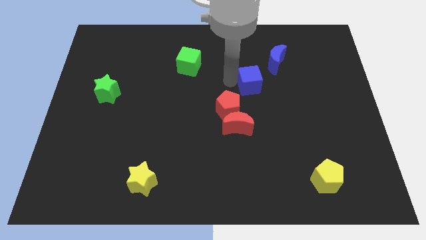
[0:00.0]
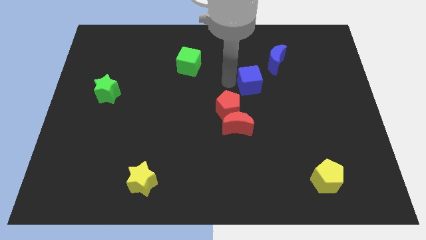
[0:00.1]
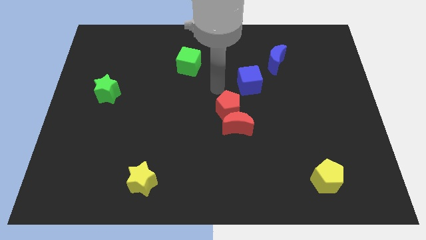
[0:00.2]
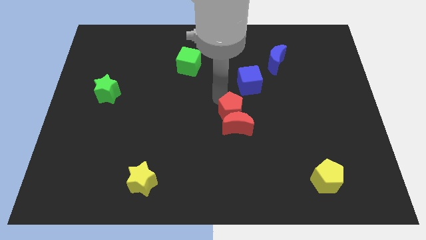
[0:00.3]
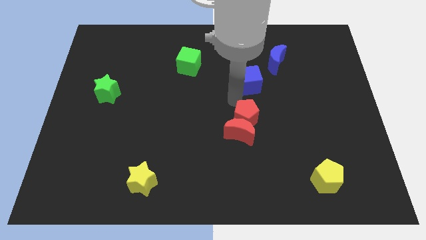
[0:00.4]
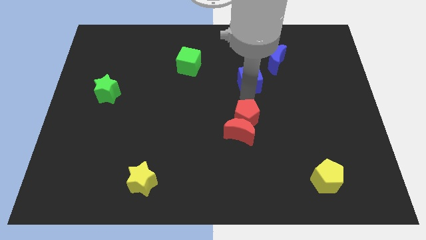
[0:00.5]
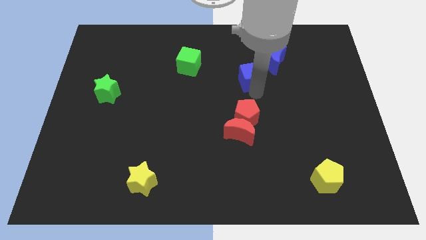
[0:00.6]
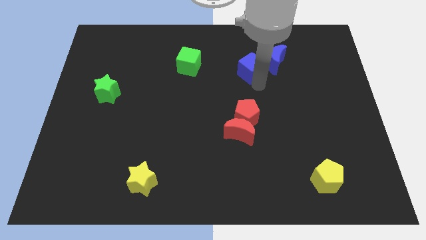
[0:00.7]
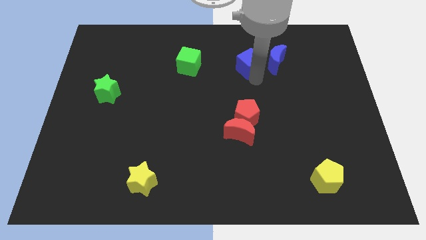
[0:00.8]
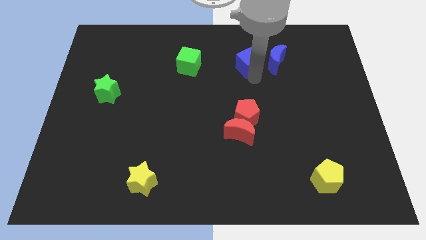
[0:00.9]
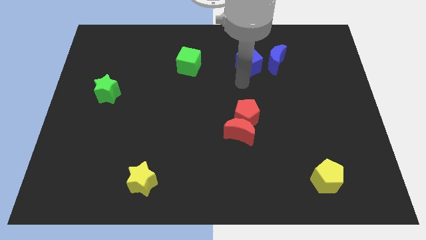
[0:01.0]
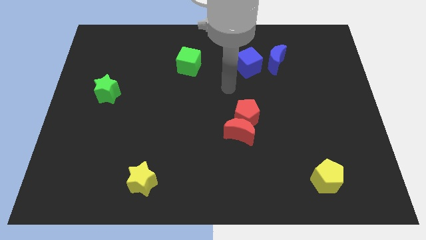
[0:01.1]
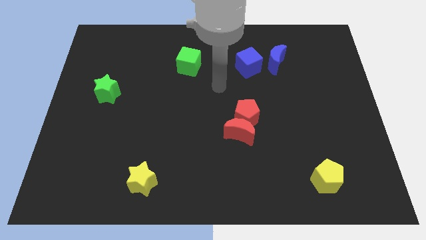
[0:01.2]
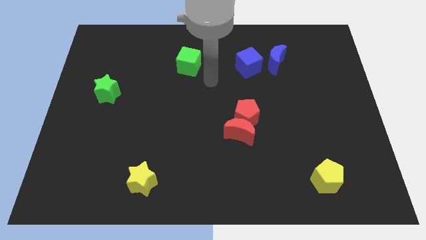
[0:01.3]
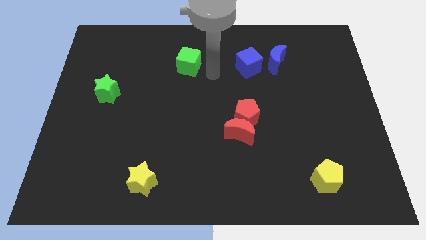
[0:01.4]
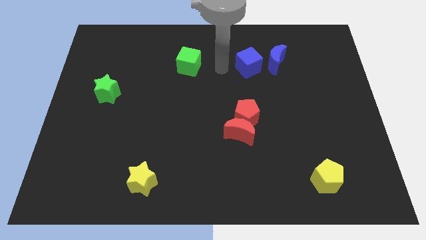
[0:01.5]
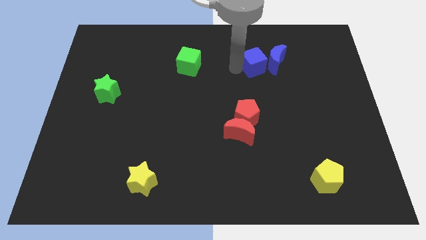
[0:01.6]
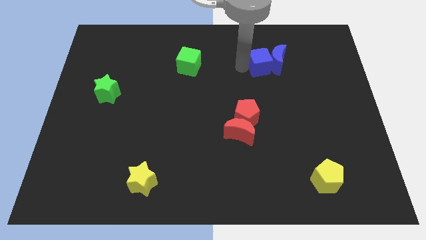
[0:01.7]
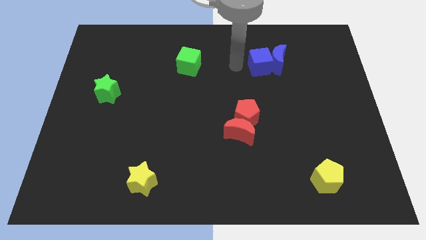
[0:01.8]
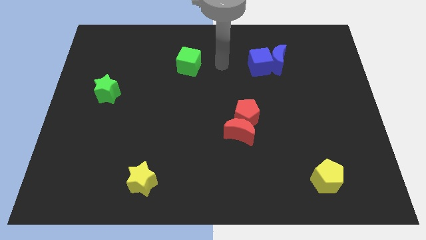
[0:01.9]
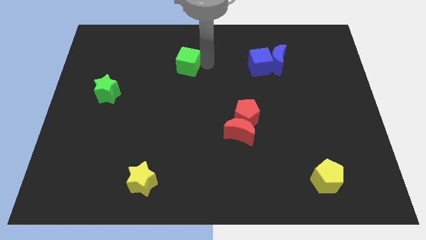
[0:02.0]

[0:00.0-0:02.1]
separate the blue blocks from the red blocks

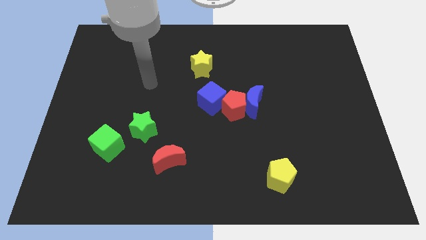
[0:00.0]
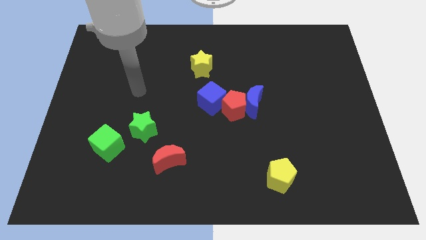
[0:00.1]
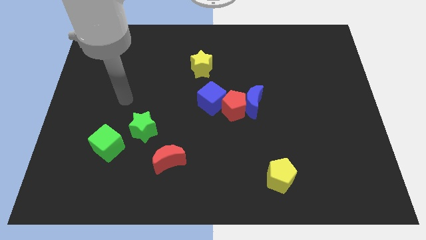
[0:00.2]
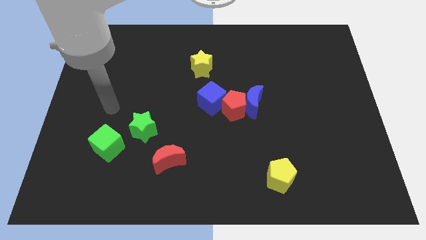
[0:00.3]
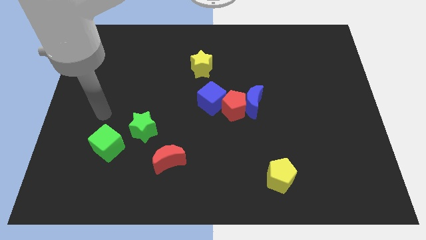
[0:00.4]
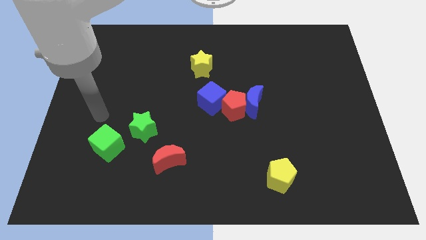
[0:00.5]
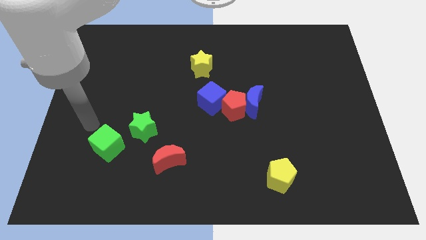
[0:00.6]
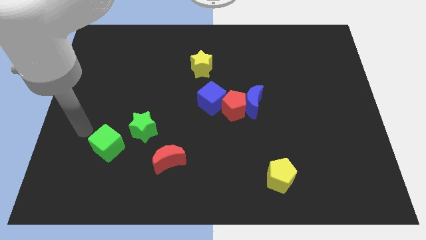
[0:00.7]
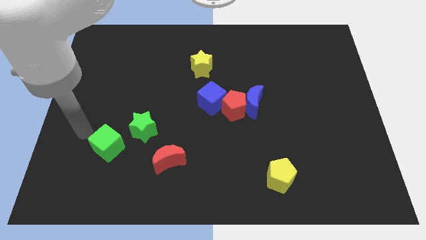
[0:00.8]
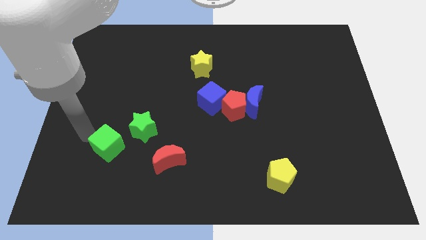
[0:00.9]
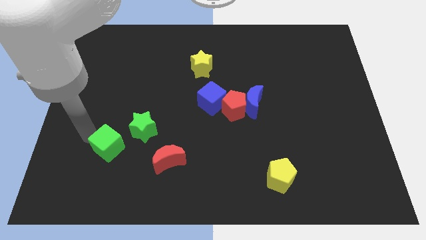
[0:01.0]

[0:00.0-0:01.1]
slide your arm to the left of green cube

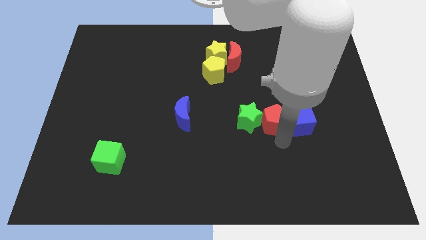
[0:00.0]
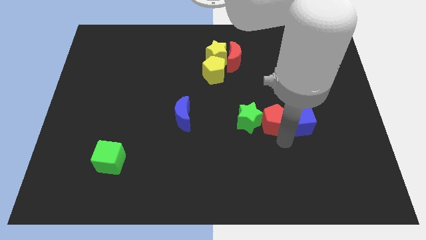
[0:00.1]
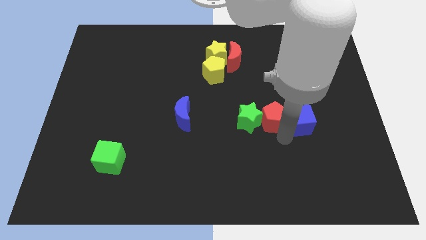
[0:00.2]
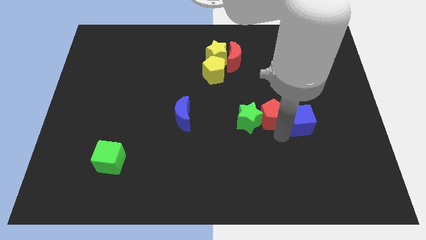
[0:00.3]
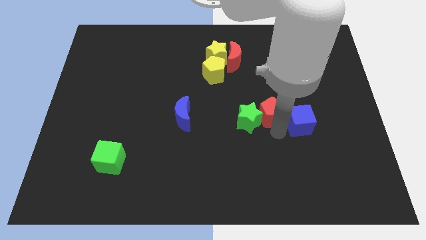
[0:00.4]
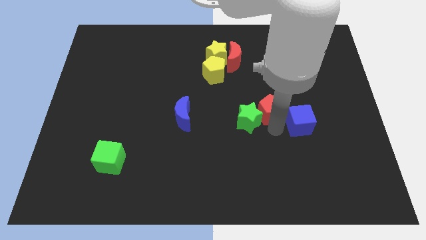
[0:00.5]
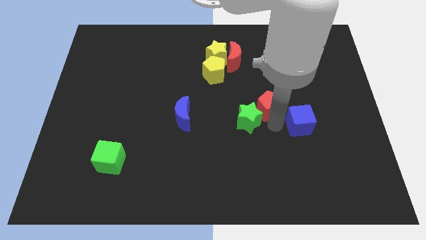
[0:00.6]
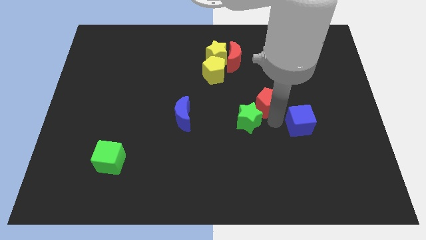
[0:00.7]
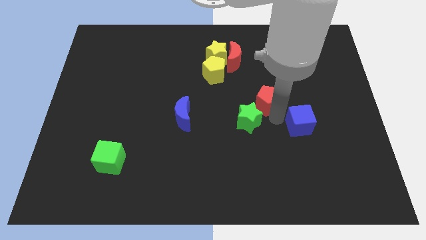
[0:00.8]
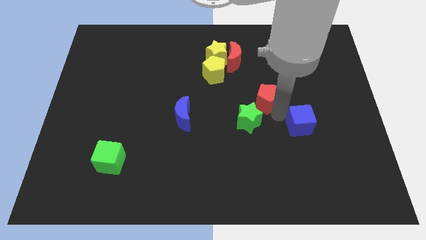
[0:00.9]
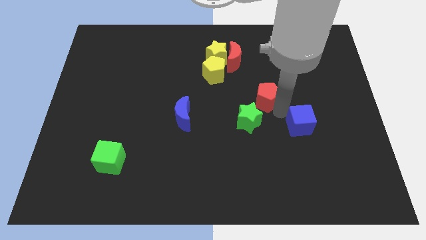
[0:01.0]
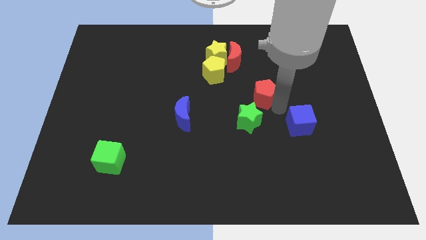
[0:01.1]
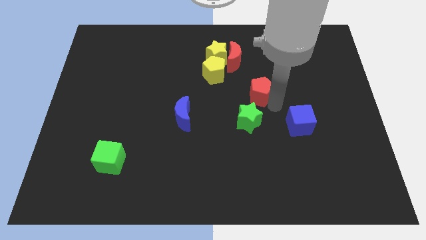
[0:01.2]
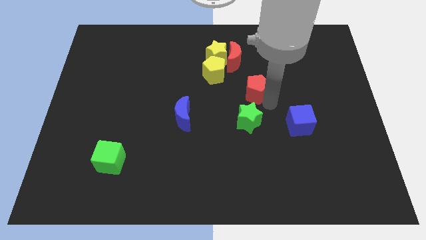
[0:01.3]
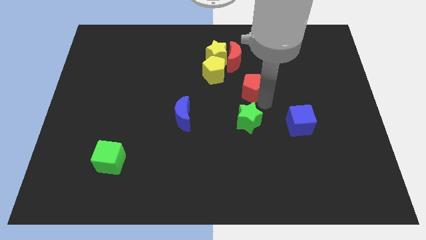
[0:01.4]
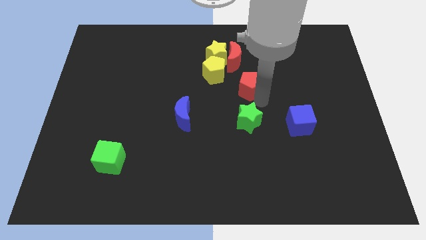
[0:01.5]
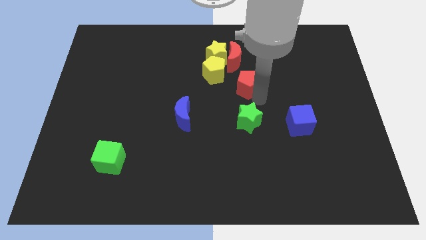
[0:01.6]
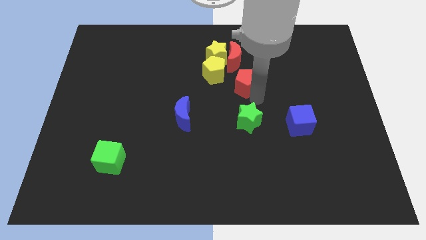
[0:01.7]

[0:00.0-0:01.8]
move the red pentagon above the green star

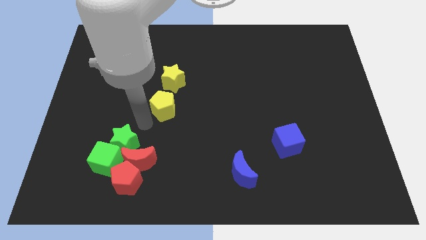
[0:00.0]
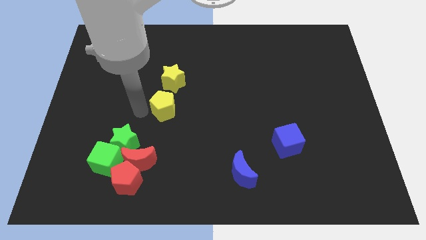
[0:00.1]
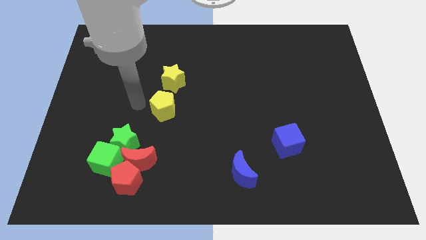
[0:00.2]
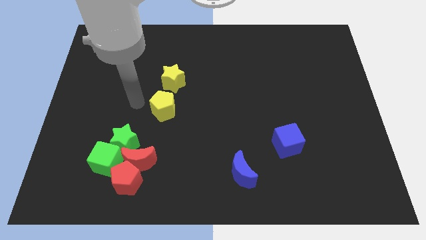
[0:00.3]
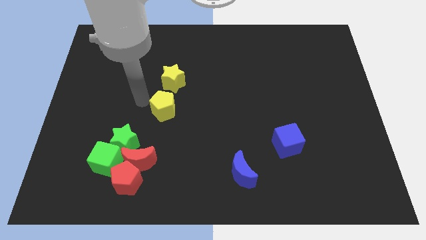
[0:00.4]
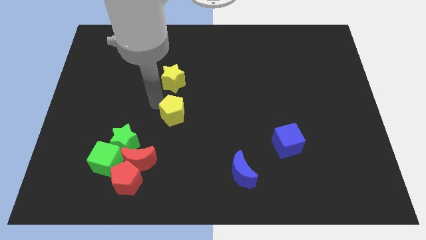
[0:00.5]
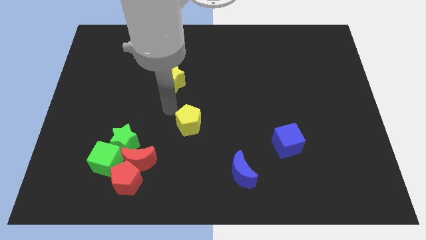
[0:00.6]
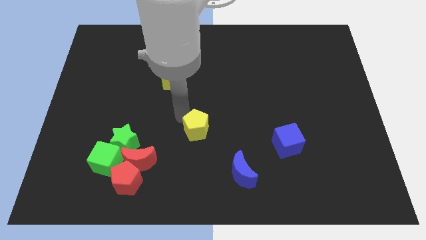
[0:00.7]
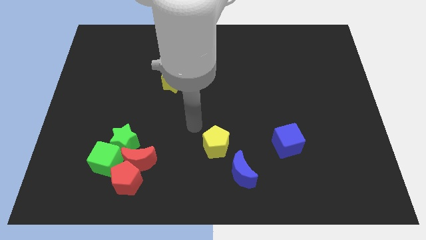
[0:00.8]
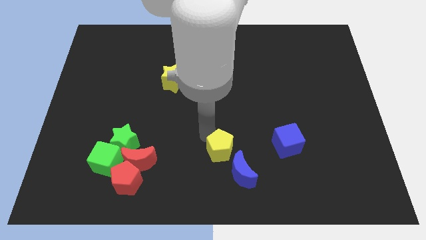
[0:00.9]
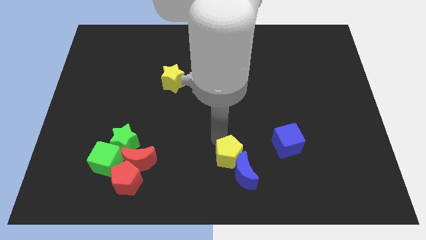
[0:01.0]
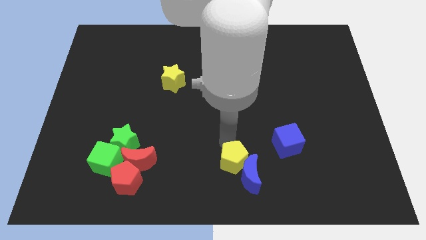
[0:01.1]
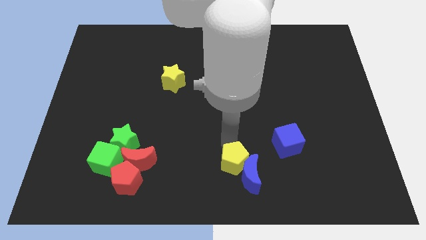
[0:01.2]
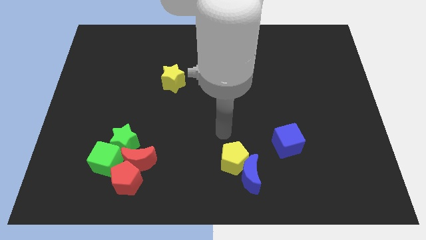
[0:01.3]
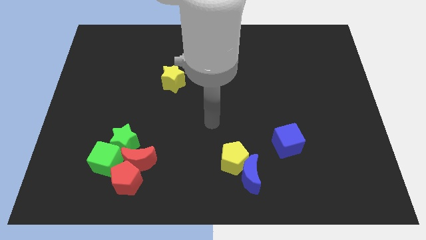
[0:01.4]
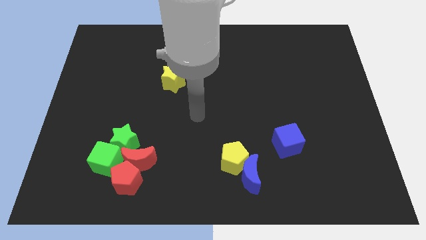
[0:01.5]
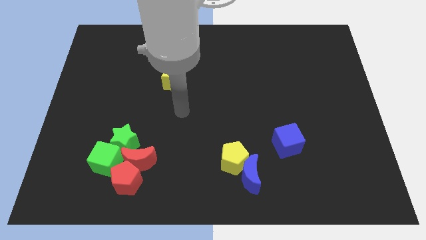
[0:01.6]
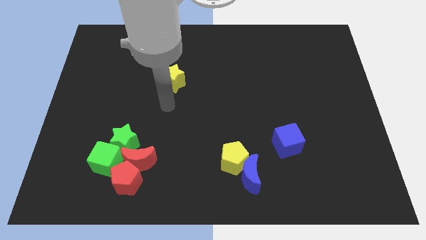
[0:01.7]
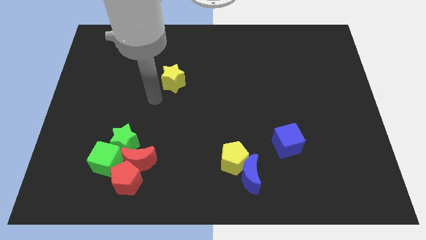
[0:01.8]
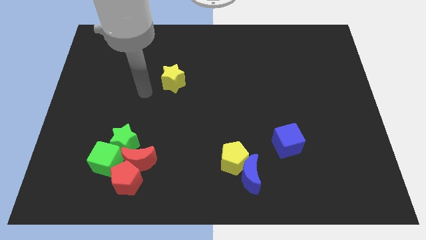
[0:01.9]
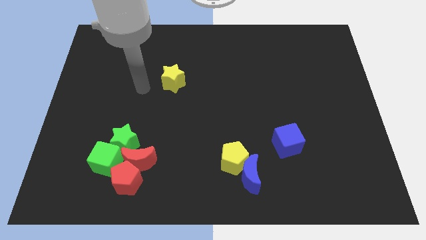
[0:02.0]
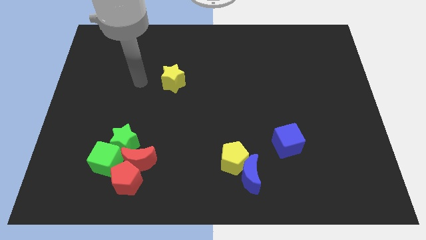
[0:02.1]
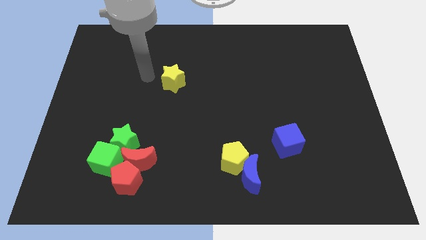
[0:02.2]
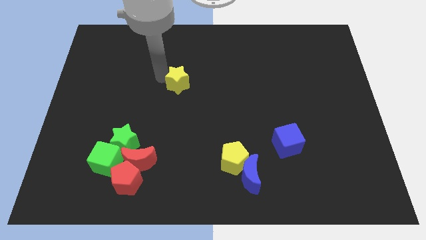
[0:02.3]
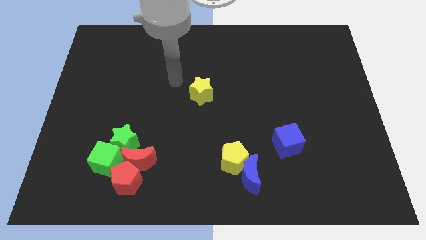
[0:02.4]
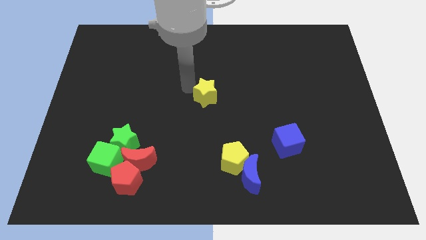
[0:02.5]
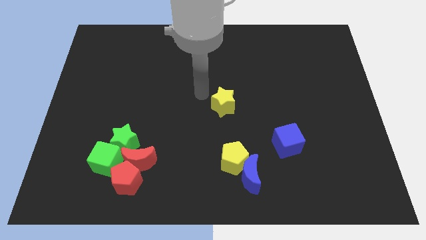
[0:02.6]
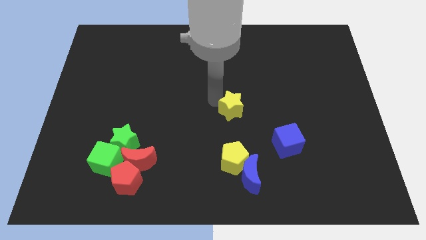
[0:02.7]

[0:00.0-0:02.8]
separate the yellow pentagon from the yellow star

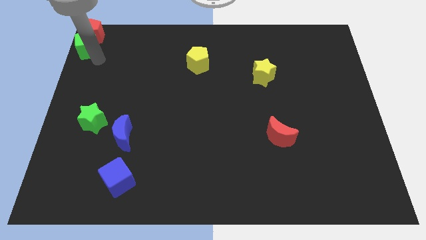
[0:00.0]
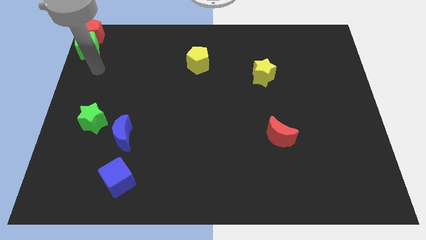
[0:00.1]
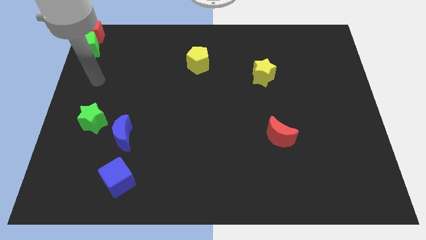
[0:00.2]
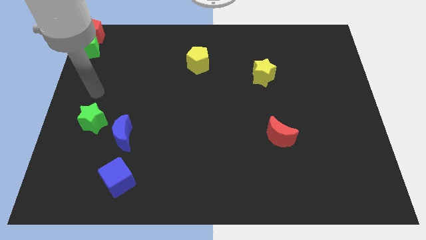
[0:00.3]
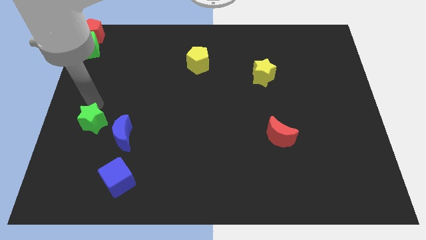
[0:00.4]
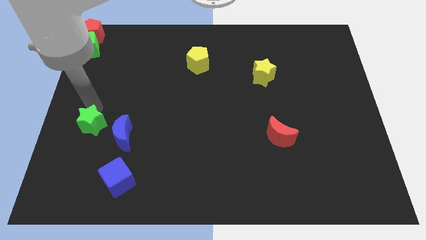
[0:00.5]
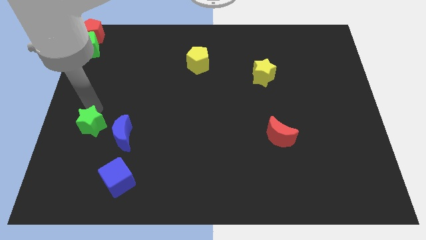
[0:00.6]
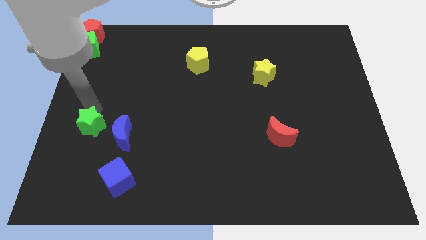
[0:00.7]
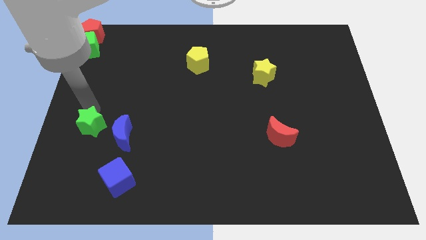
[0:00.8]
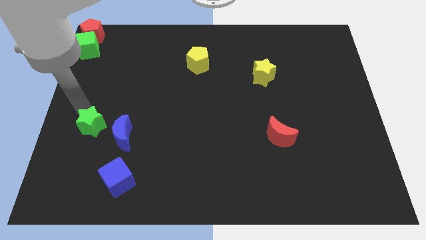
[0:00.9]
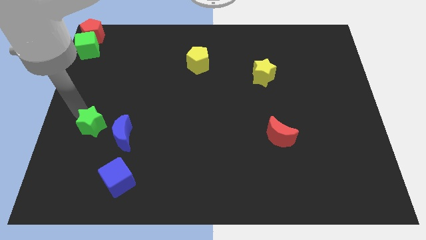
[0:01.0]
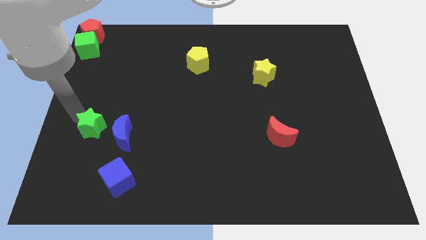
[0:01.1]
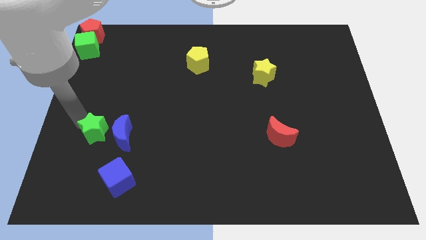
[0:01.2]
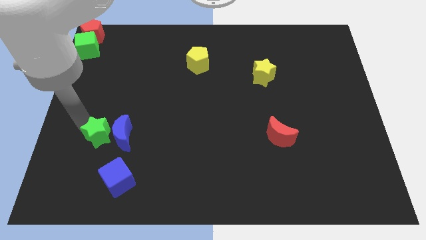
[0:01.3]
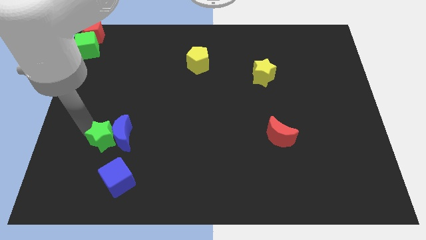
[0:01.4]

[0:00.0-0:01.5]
push the green star to the left side of blue crescent
